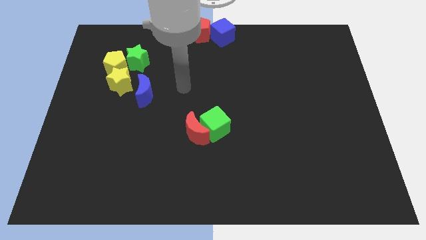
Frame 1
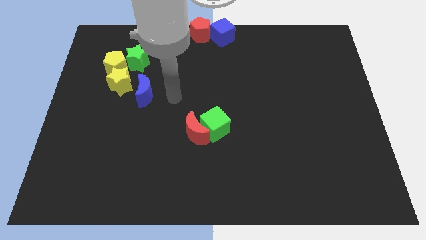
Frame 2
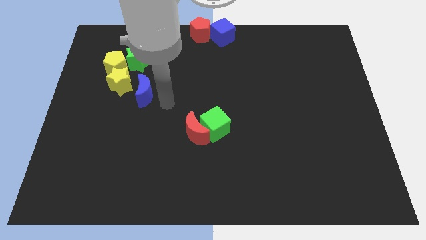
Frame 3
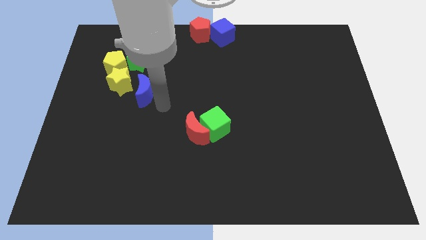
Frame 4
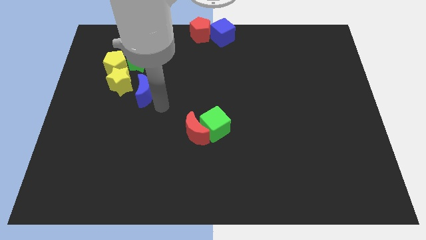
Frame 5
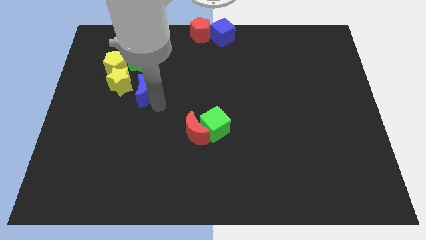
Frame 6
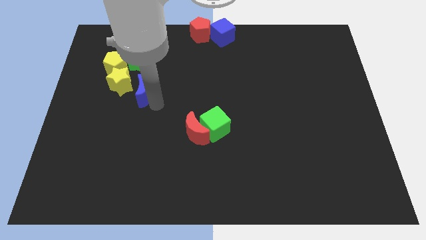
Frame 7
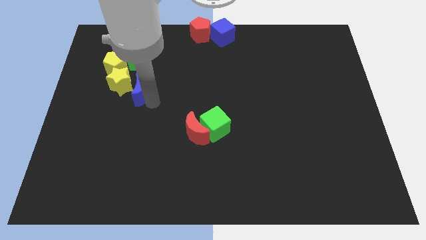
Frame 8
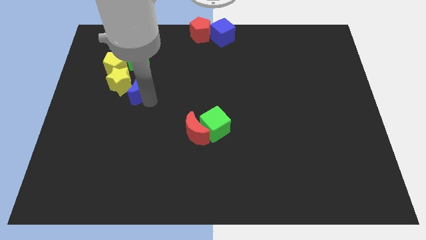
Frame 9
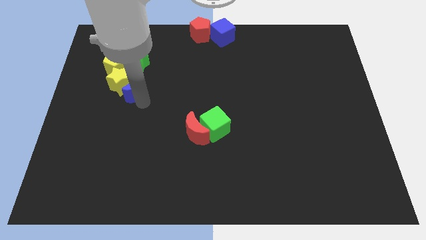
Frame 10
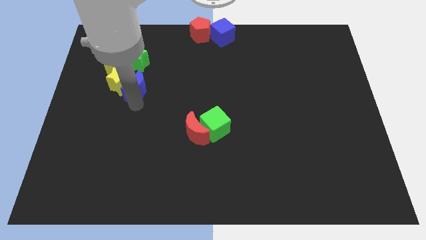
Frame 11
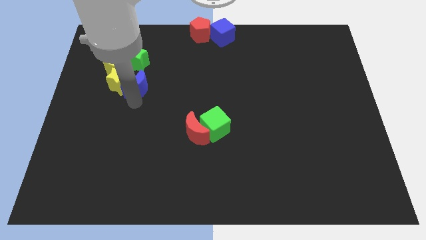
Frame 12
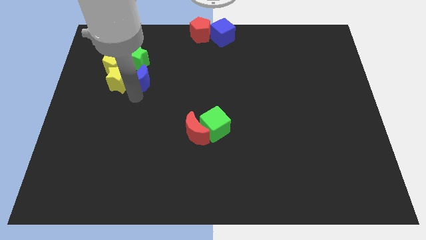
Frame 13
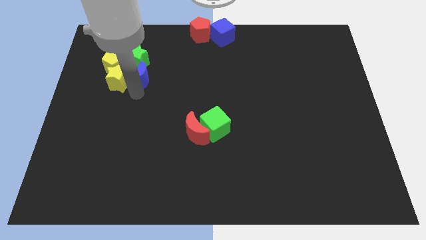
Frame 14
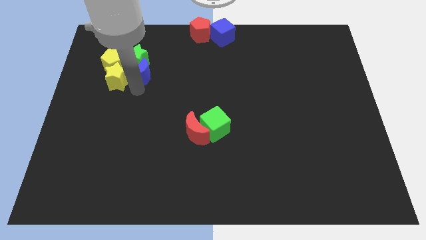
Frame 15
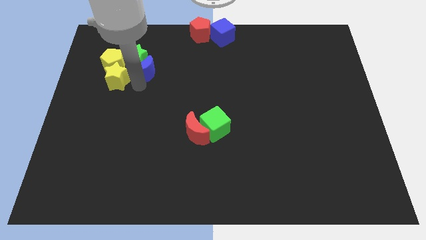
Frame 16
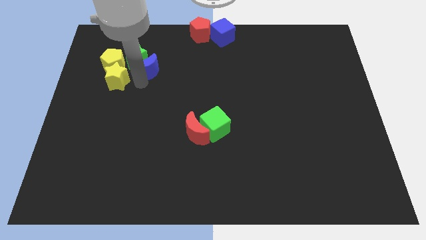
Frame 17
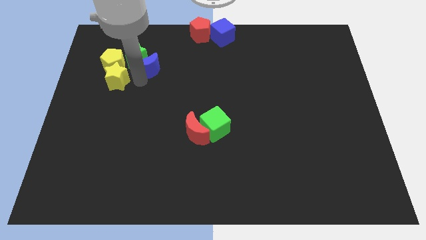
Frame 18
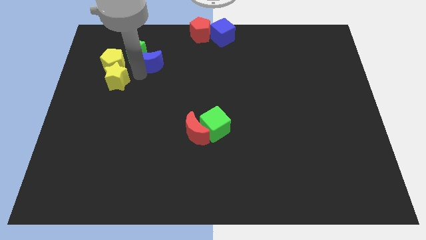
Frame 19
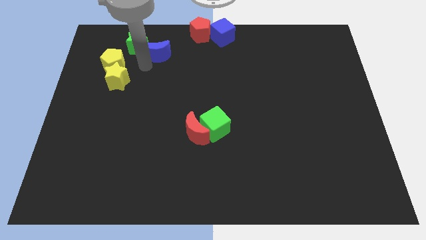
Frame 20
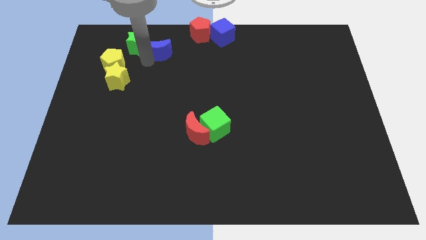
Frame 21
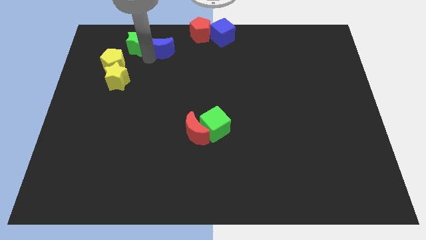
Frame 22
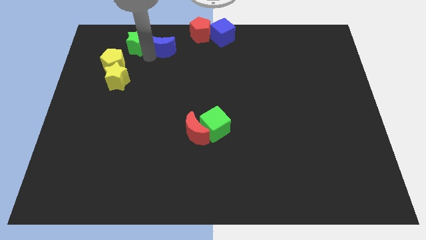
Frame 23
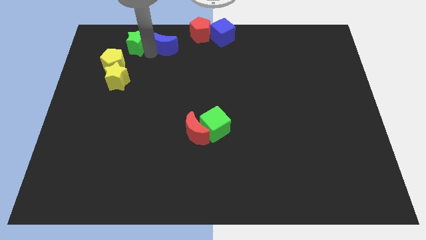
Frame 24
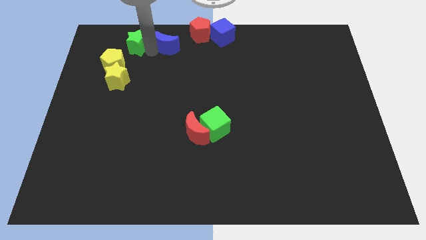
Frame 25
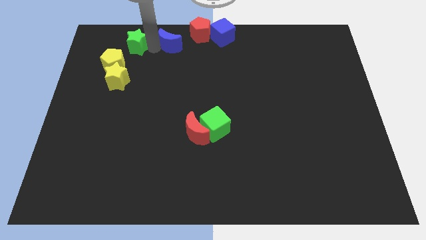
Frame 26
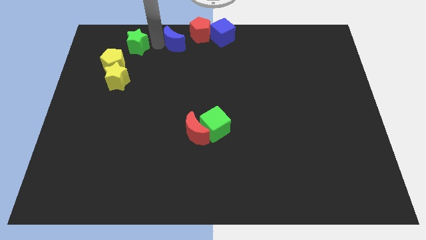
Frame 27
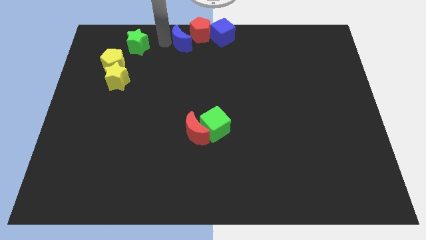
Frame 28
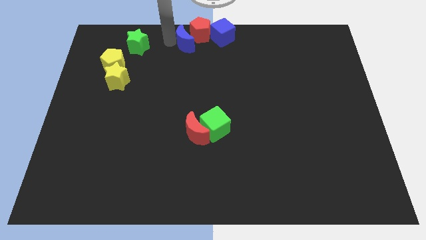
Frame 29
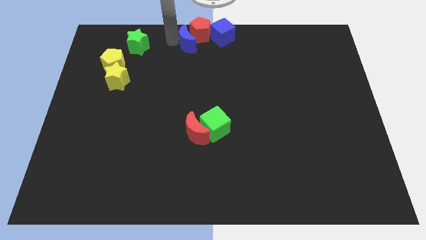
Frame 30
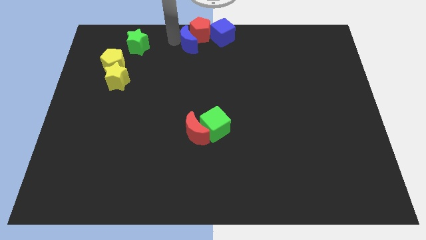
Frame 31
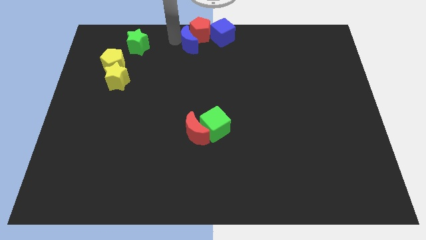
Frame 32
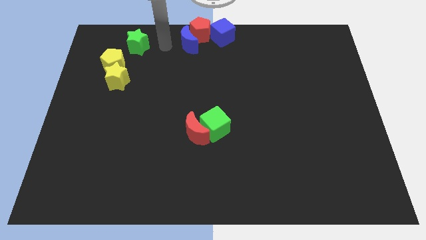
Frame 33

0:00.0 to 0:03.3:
push the blue moon to the left side of the red pentagon

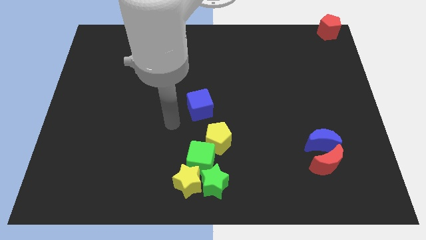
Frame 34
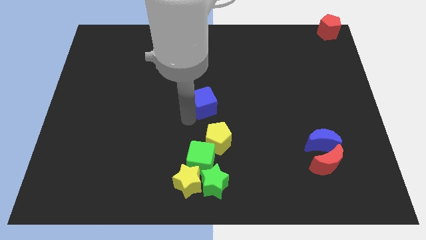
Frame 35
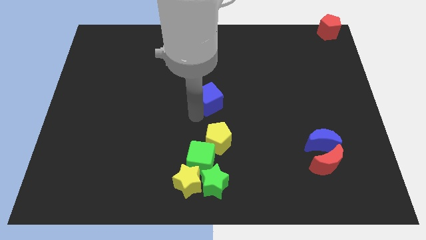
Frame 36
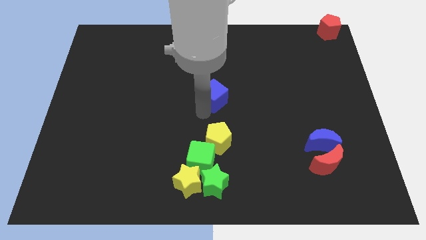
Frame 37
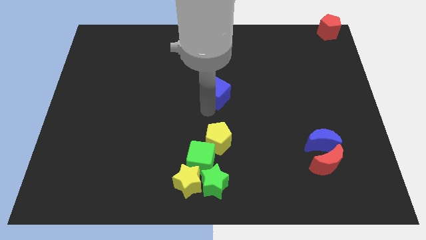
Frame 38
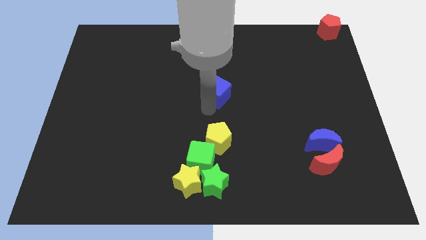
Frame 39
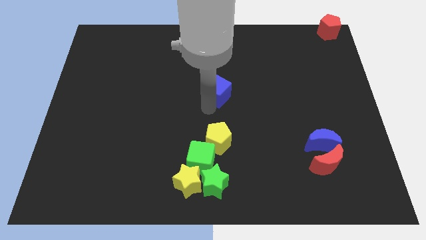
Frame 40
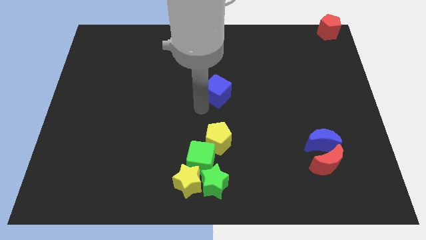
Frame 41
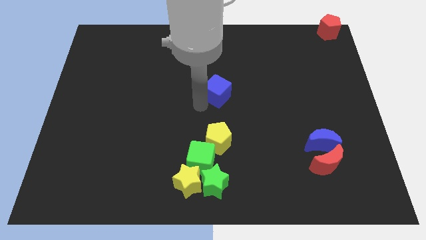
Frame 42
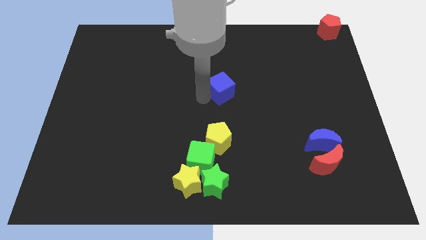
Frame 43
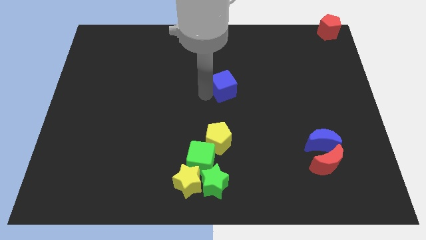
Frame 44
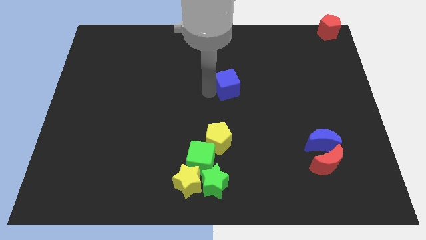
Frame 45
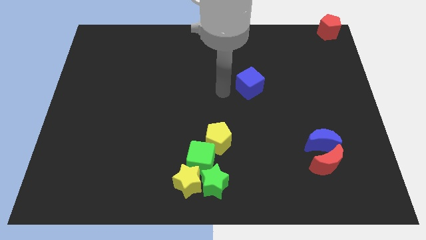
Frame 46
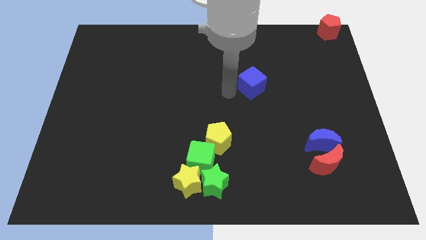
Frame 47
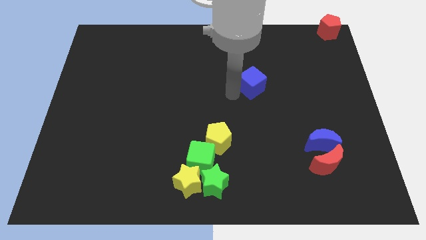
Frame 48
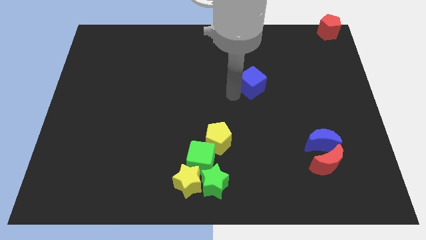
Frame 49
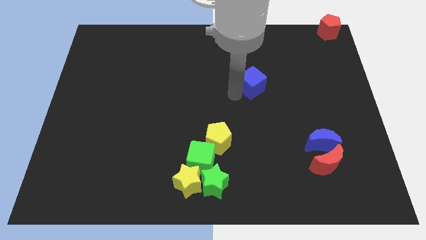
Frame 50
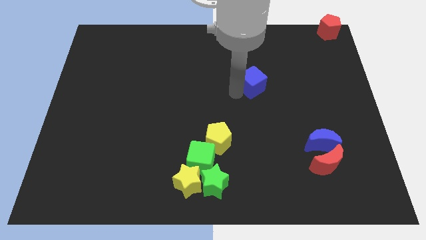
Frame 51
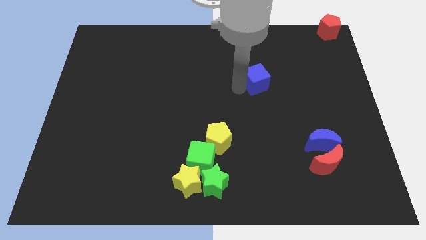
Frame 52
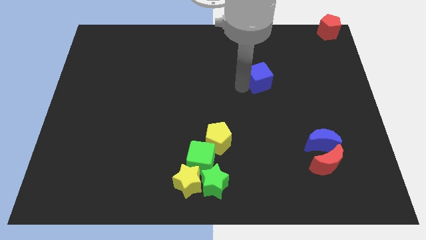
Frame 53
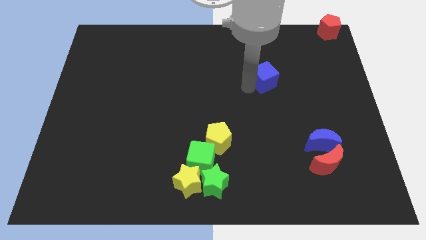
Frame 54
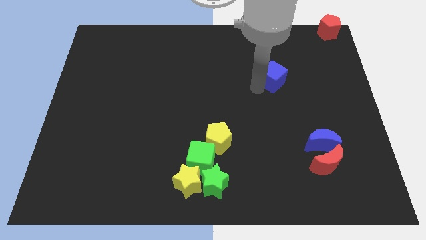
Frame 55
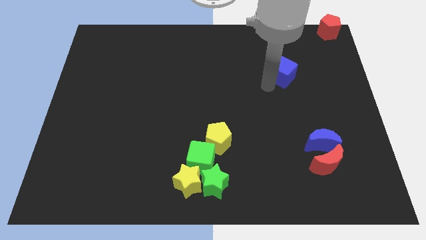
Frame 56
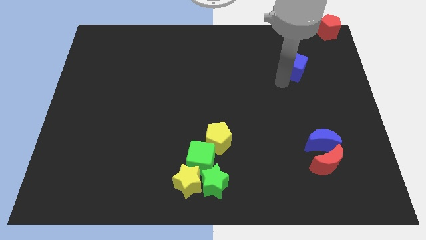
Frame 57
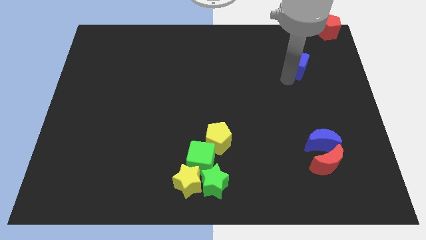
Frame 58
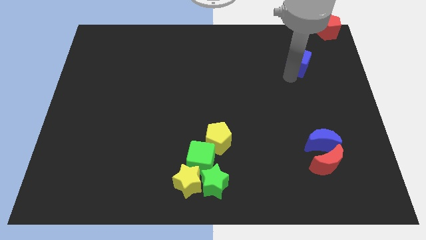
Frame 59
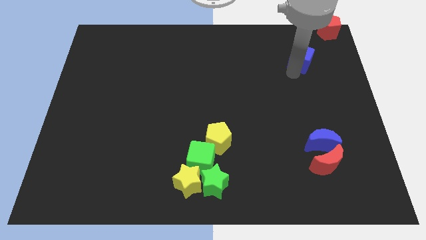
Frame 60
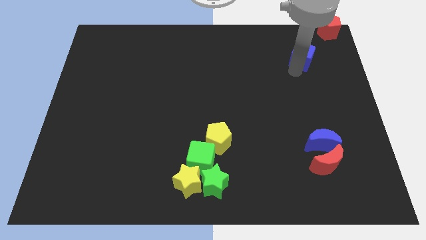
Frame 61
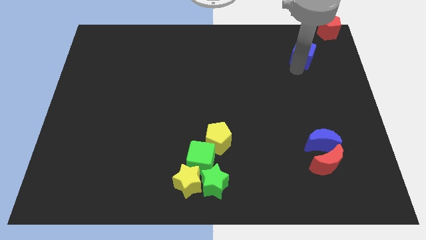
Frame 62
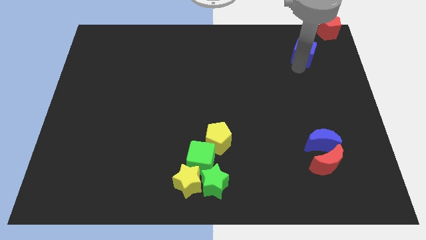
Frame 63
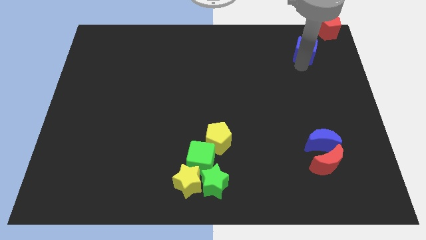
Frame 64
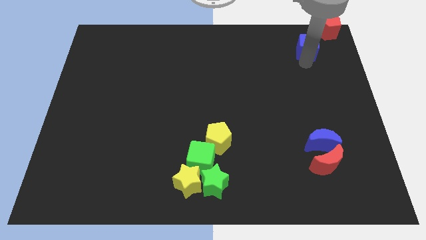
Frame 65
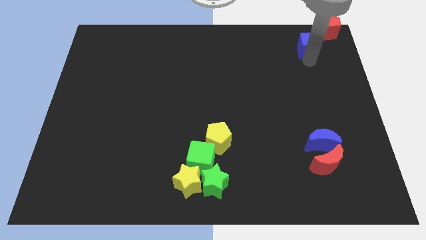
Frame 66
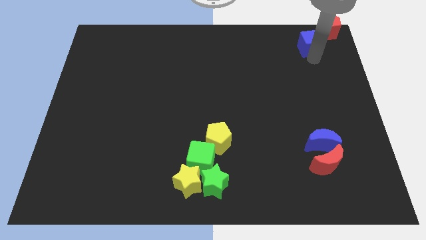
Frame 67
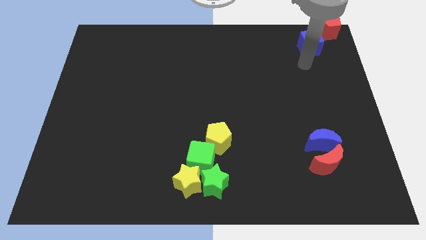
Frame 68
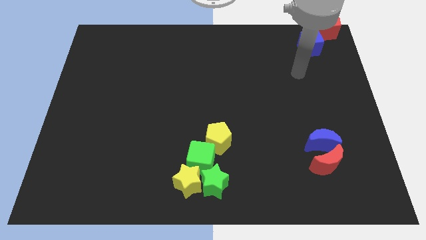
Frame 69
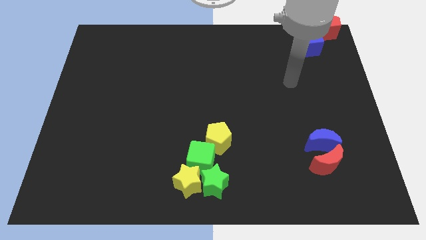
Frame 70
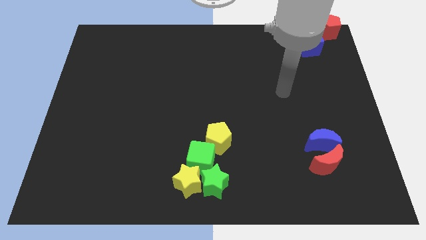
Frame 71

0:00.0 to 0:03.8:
push the blue cube at the top right corner of the board

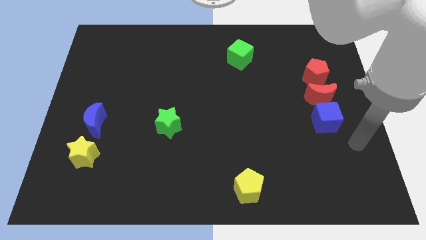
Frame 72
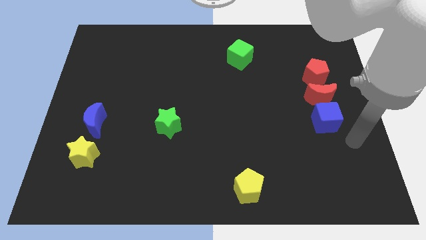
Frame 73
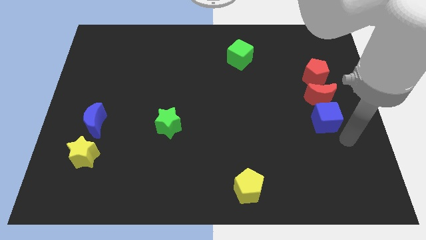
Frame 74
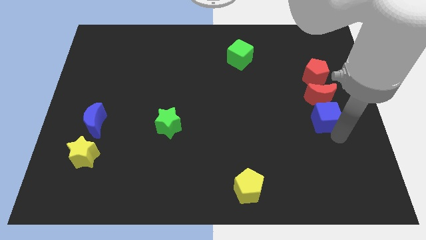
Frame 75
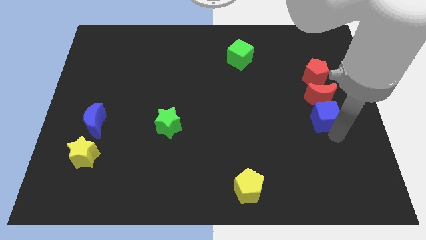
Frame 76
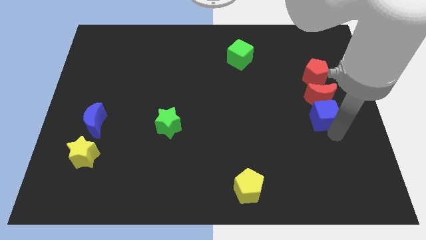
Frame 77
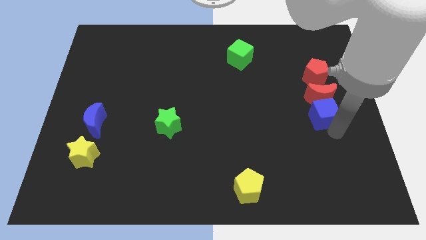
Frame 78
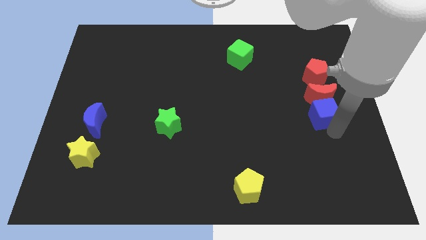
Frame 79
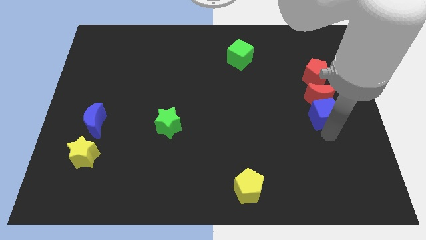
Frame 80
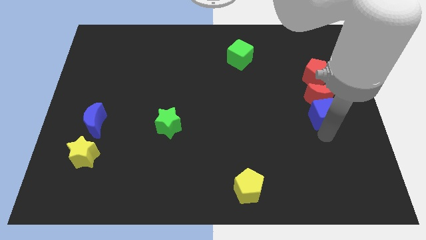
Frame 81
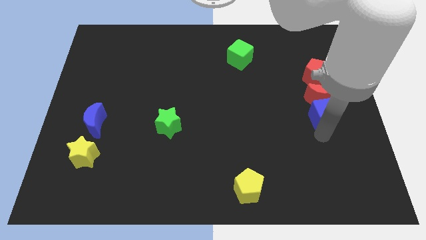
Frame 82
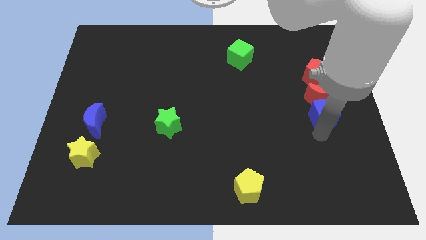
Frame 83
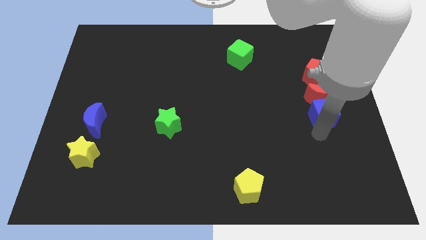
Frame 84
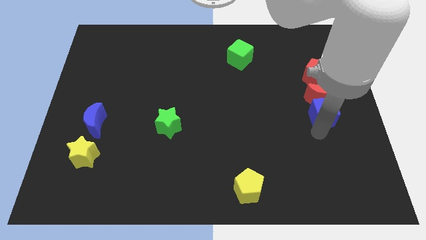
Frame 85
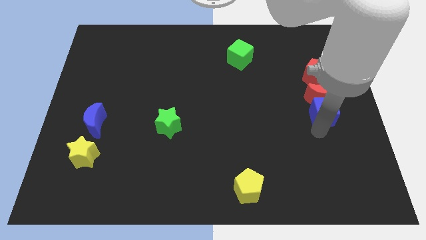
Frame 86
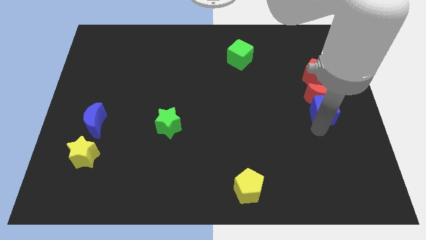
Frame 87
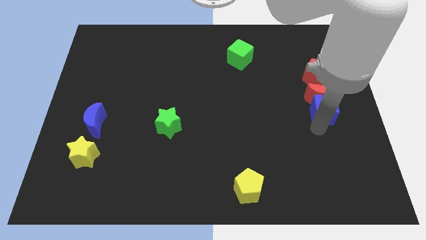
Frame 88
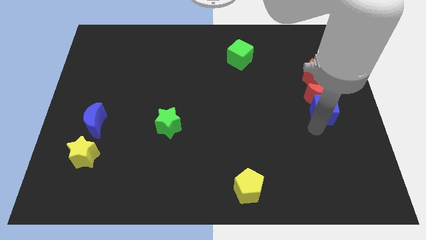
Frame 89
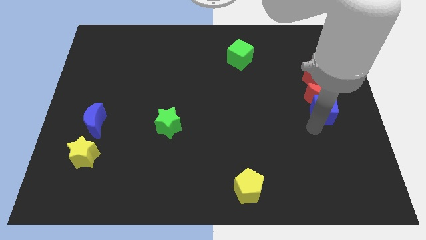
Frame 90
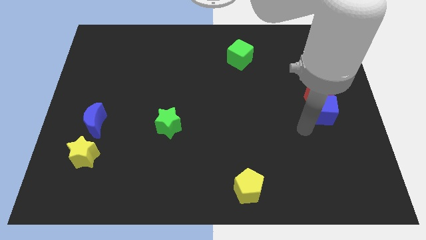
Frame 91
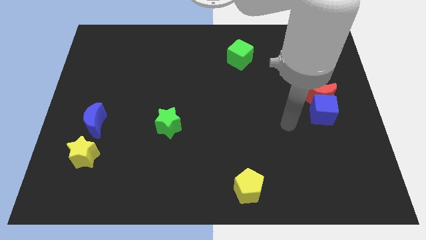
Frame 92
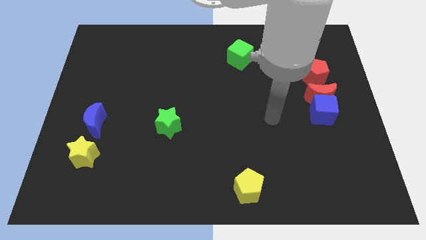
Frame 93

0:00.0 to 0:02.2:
make the blue cube touch the bottom of the red moon
